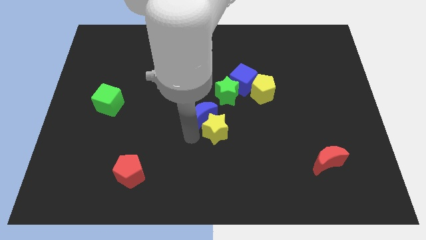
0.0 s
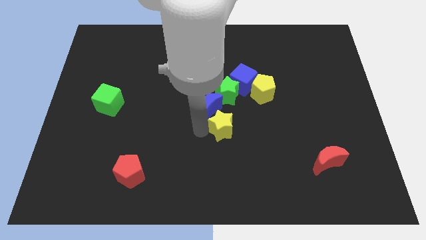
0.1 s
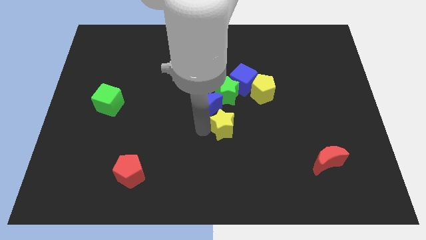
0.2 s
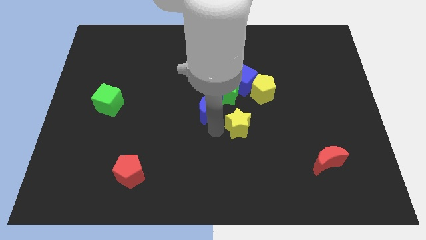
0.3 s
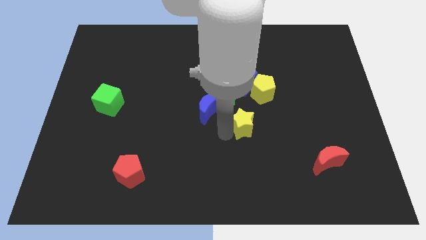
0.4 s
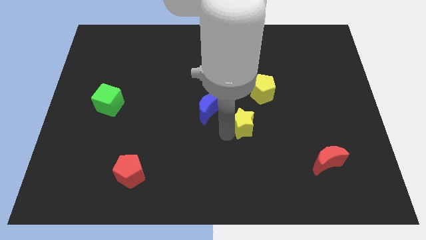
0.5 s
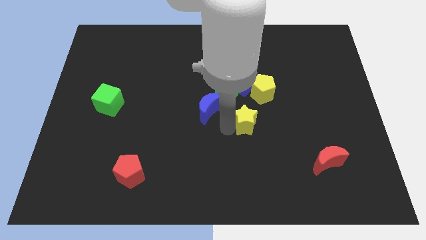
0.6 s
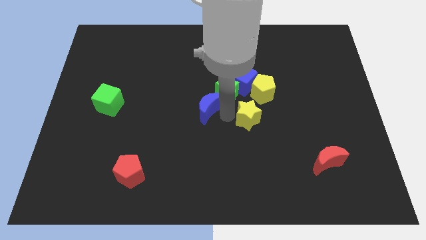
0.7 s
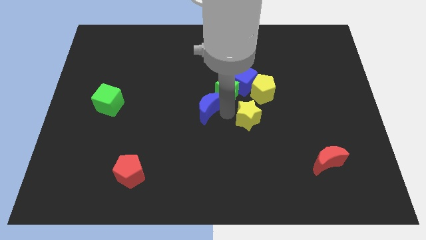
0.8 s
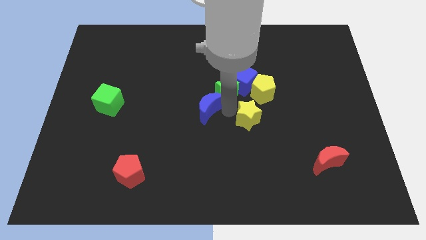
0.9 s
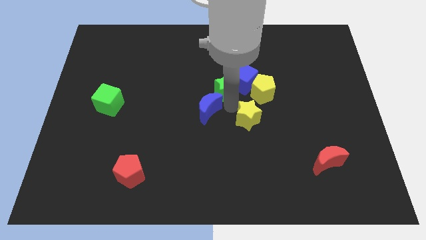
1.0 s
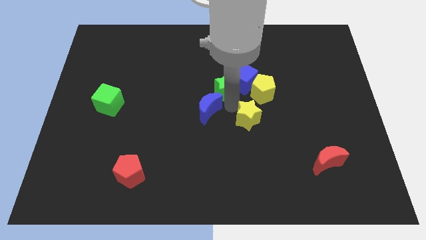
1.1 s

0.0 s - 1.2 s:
separate the yellow star from the blue moon

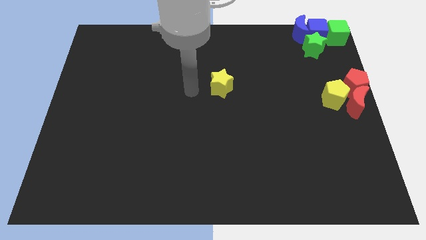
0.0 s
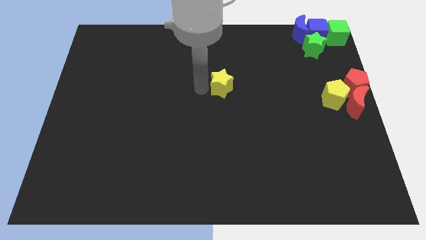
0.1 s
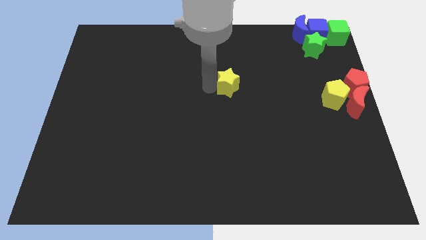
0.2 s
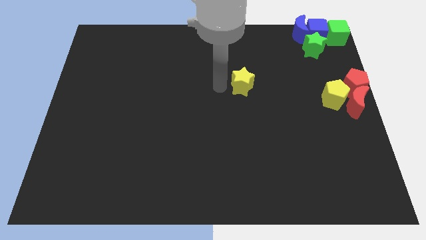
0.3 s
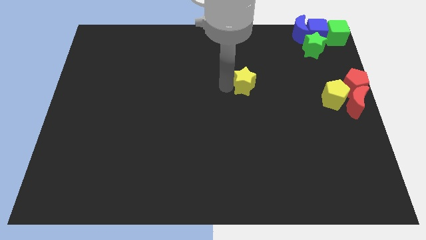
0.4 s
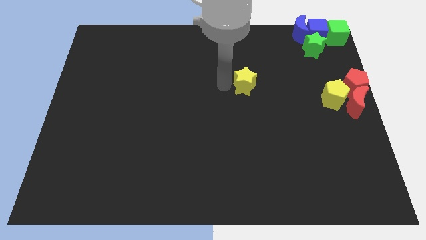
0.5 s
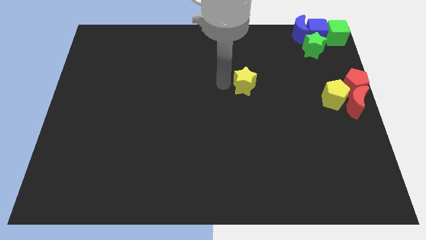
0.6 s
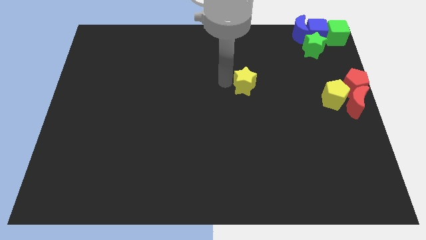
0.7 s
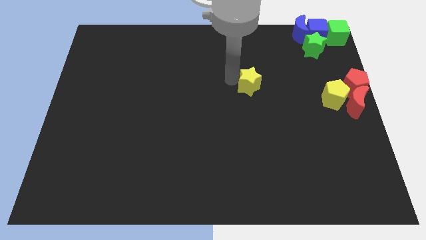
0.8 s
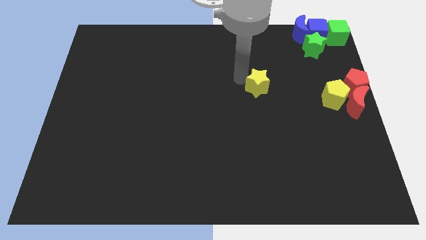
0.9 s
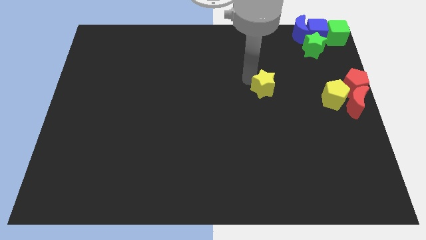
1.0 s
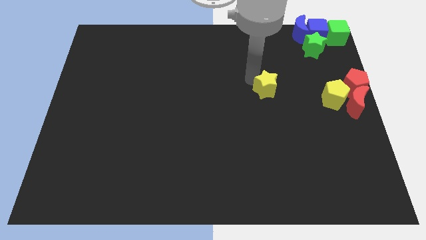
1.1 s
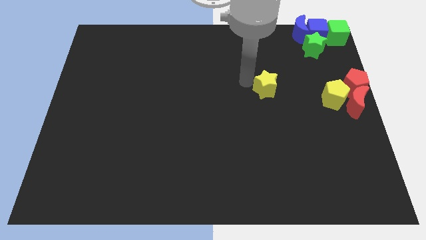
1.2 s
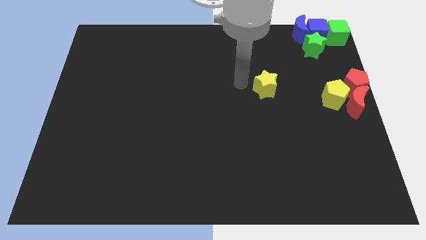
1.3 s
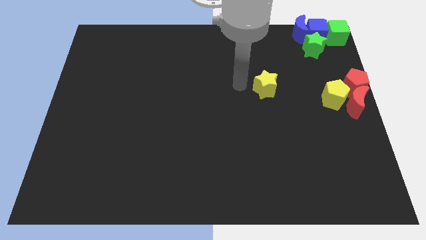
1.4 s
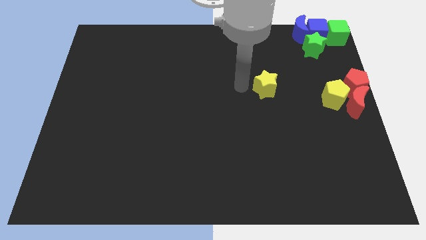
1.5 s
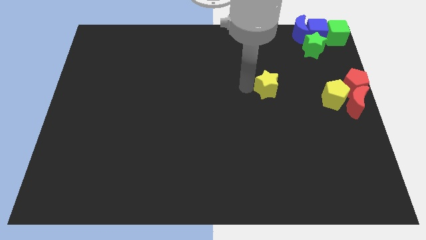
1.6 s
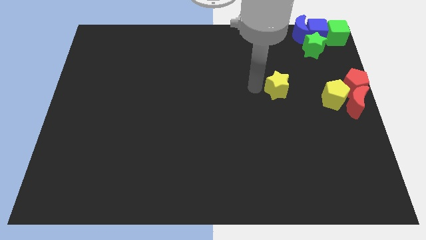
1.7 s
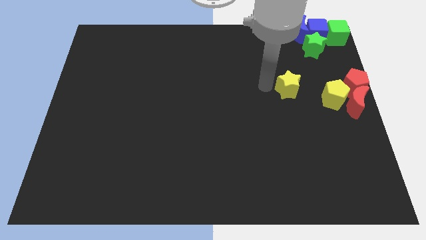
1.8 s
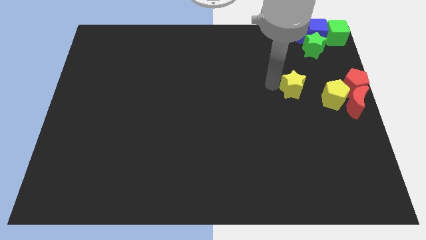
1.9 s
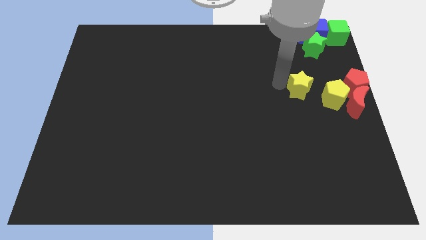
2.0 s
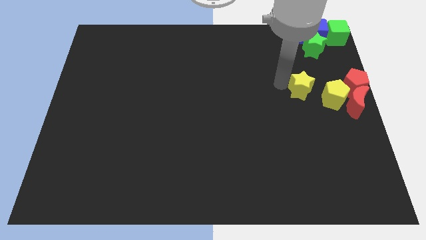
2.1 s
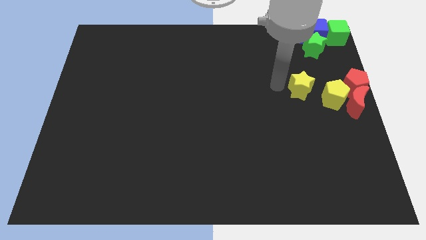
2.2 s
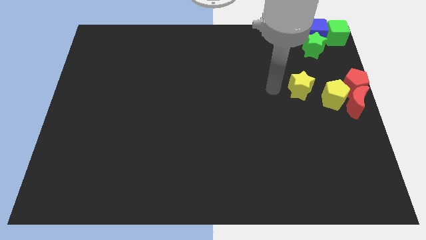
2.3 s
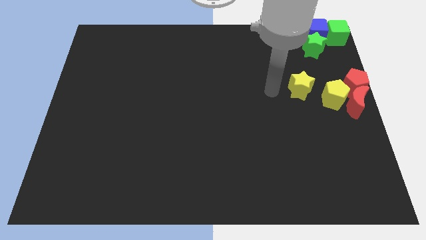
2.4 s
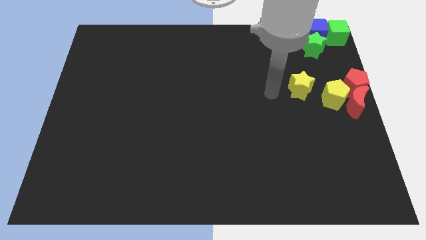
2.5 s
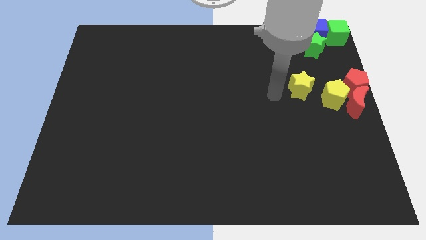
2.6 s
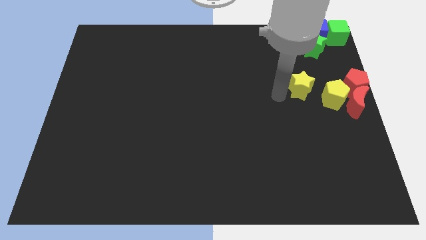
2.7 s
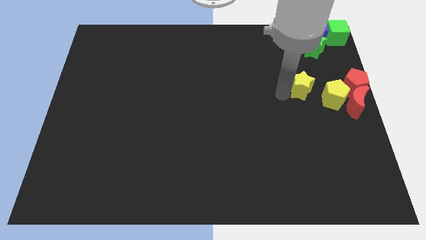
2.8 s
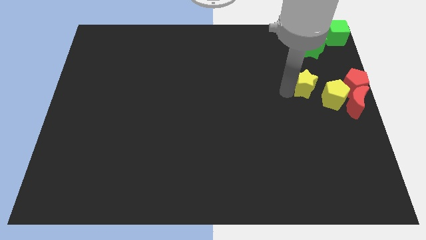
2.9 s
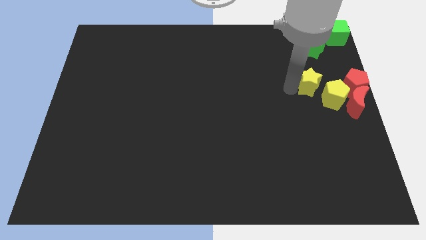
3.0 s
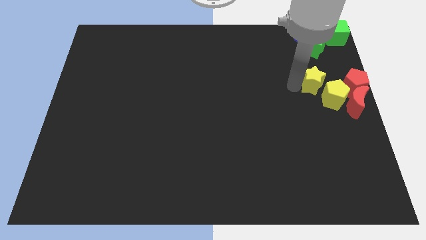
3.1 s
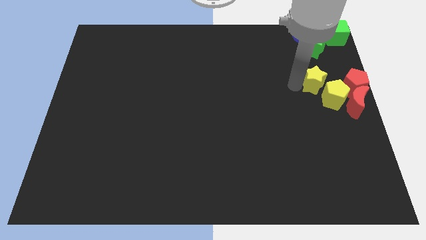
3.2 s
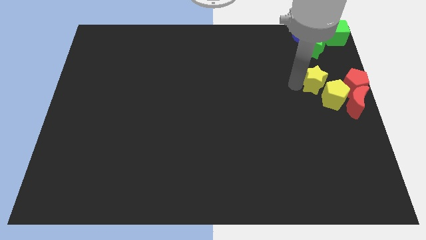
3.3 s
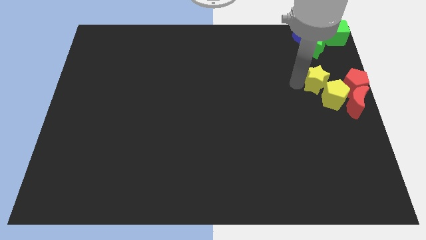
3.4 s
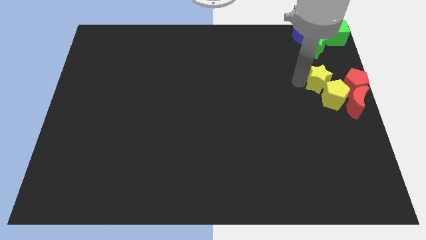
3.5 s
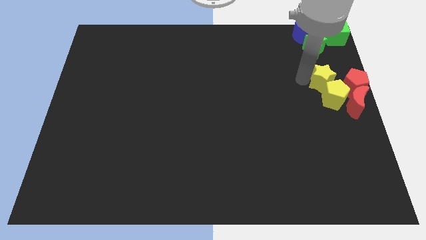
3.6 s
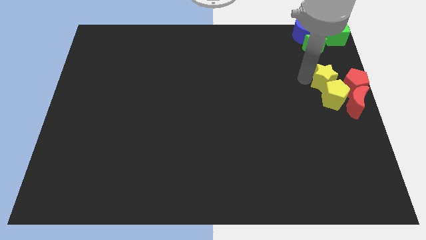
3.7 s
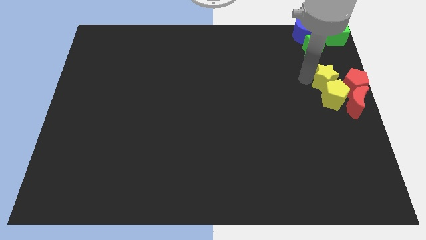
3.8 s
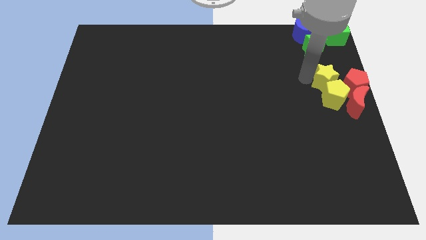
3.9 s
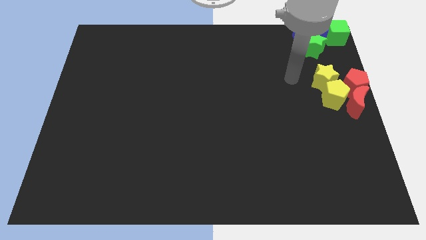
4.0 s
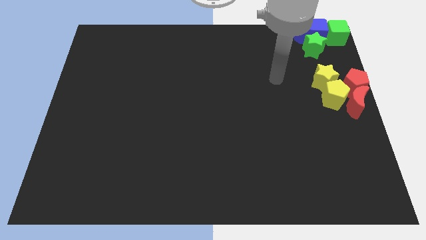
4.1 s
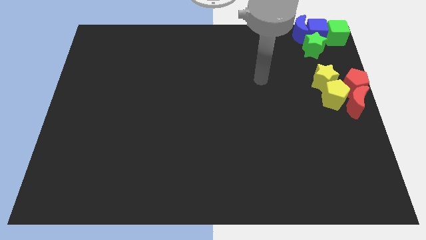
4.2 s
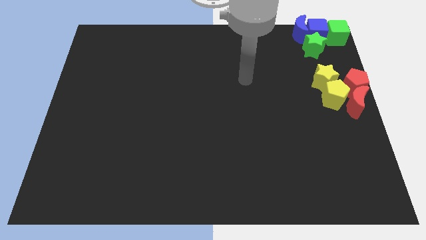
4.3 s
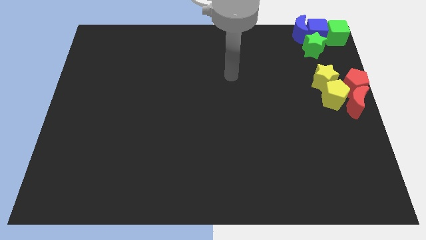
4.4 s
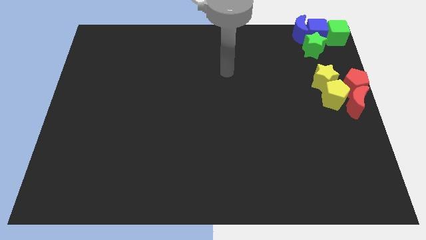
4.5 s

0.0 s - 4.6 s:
put the yellow star vertically below the green star

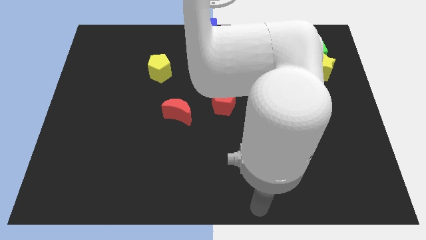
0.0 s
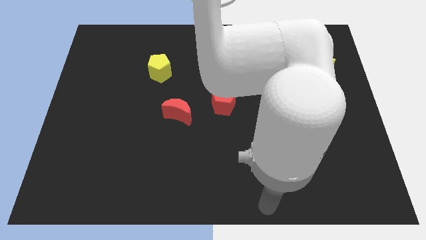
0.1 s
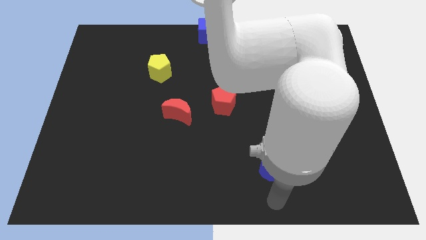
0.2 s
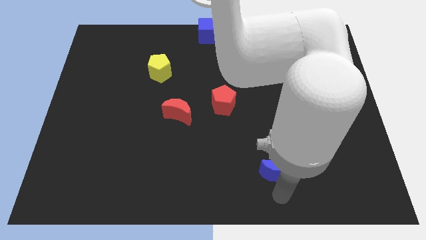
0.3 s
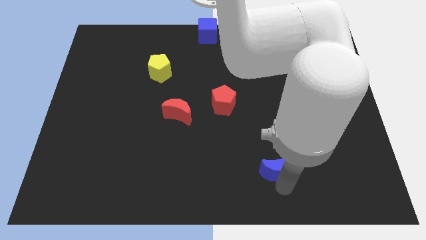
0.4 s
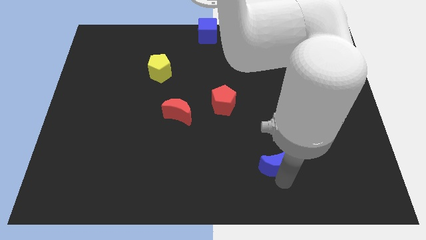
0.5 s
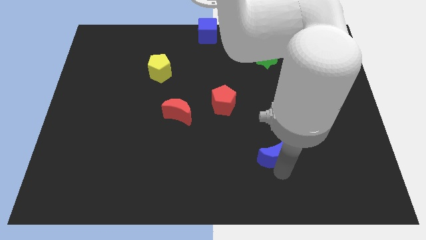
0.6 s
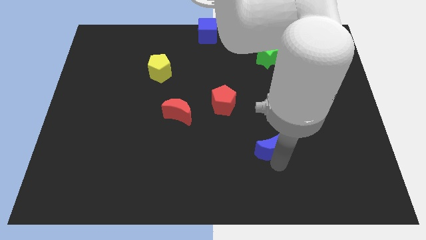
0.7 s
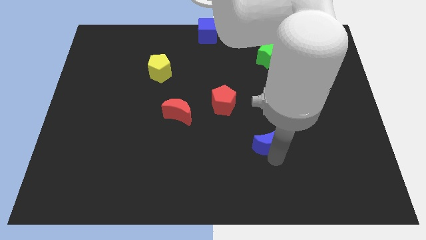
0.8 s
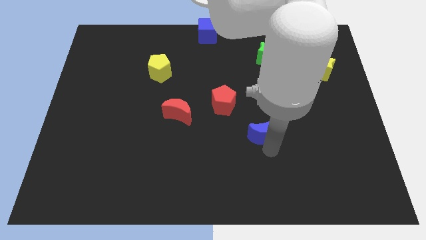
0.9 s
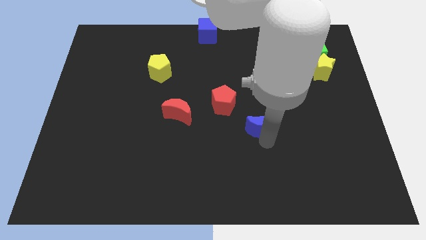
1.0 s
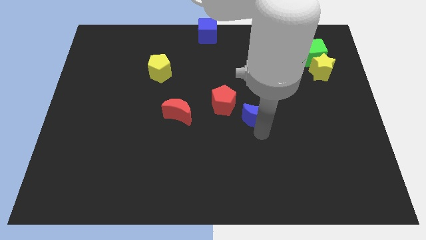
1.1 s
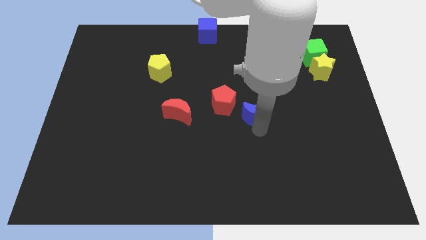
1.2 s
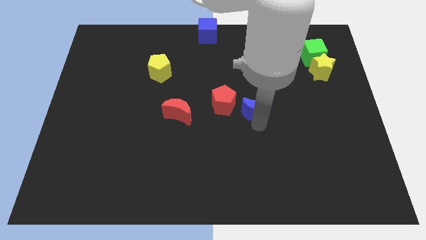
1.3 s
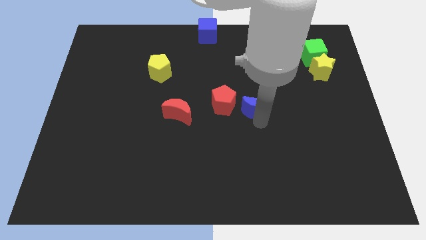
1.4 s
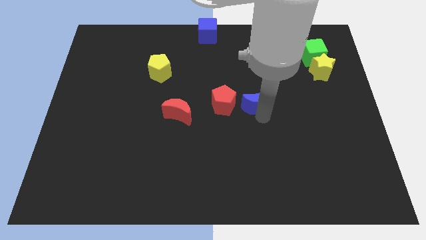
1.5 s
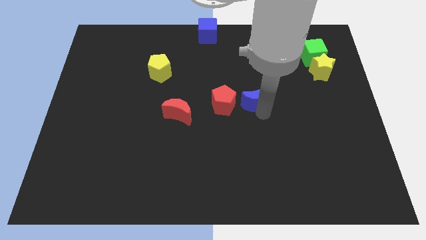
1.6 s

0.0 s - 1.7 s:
move the blue moon to the right of the red pentagon

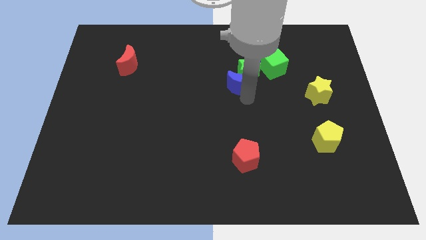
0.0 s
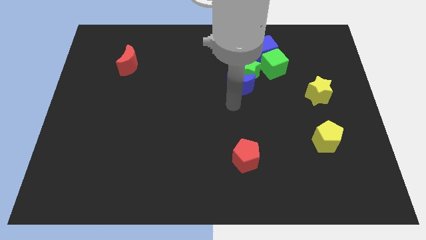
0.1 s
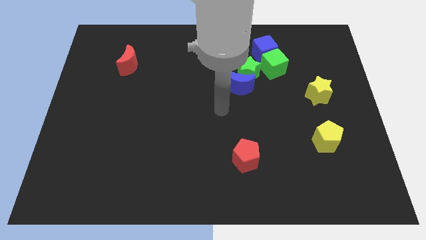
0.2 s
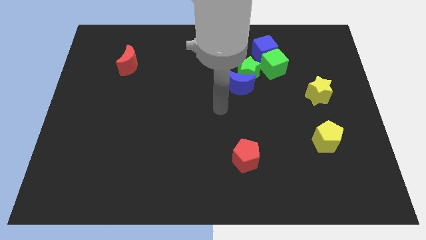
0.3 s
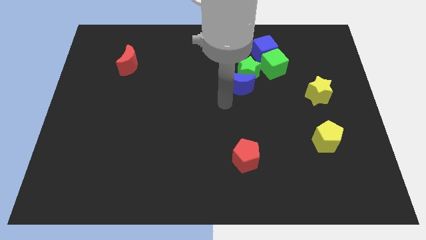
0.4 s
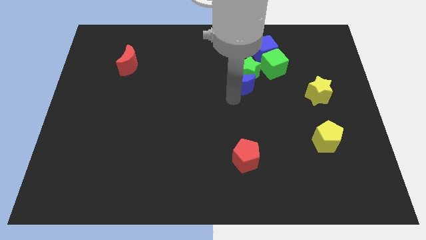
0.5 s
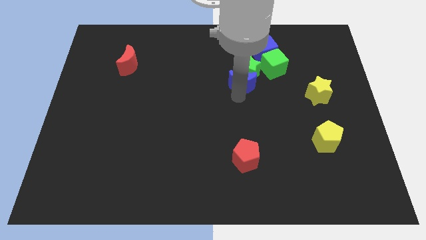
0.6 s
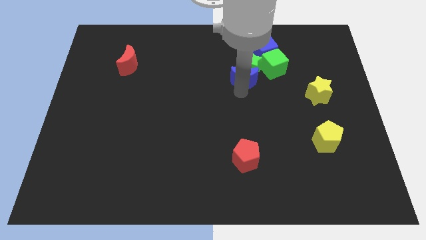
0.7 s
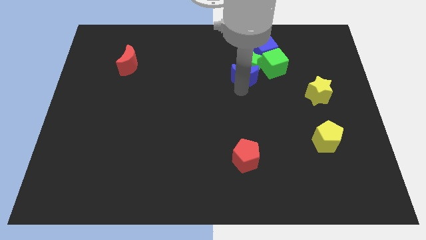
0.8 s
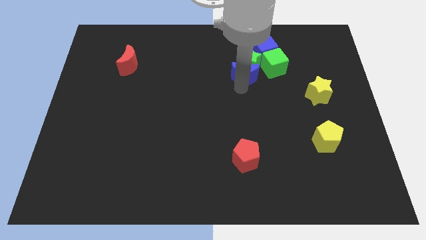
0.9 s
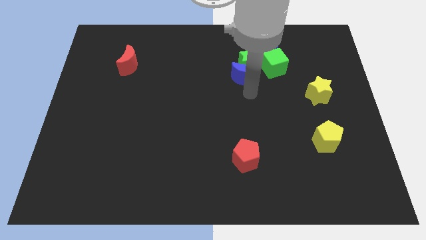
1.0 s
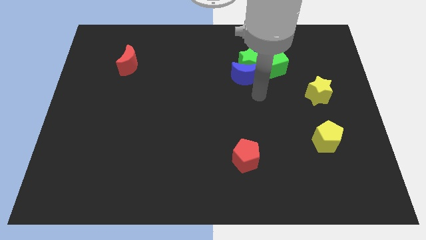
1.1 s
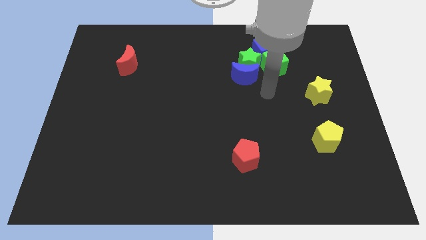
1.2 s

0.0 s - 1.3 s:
push blue moon into green star
